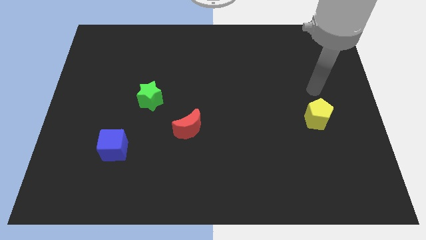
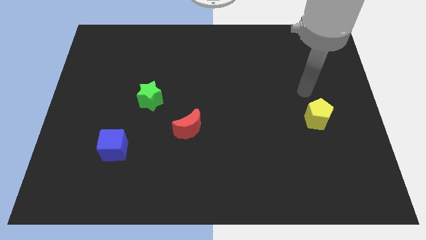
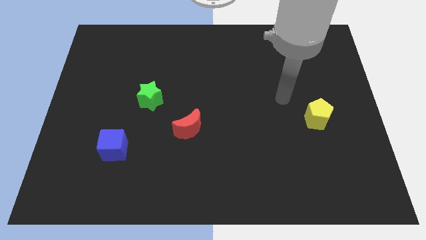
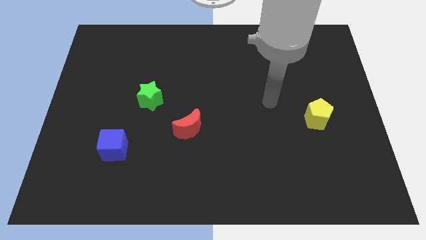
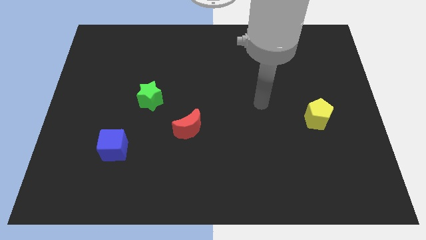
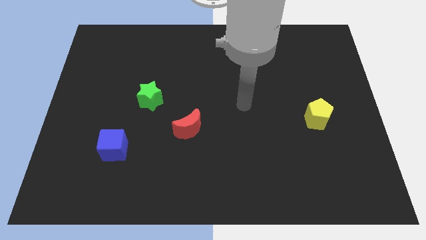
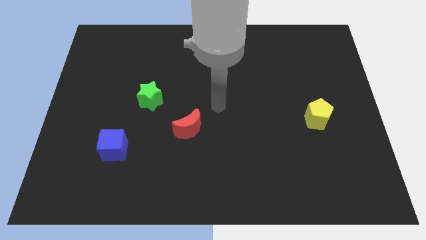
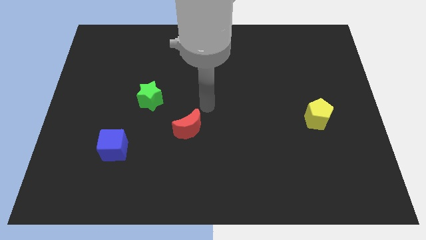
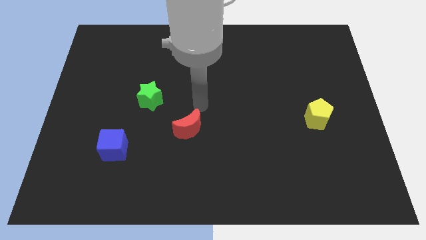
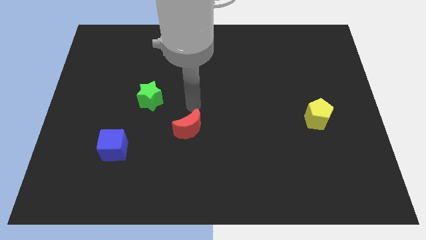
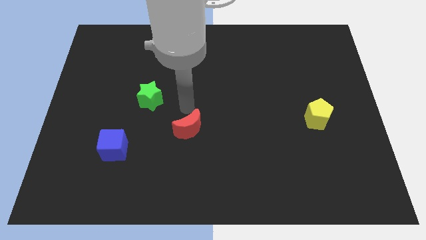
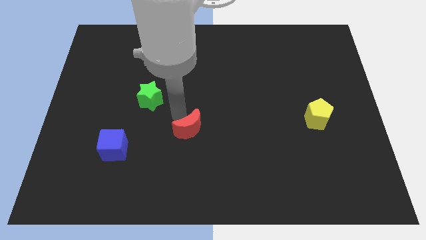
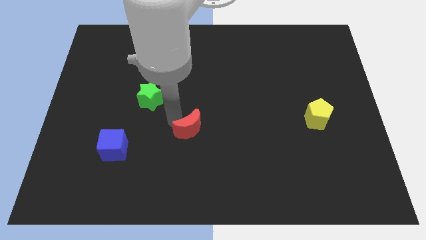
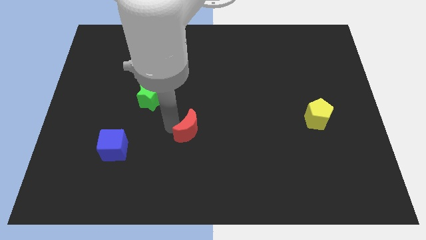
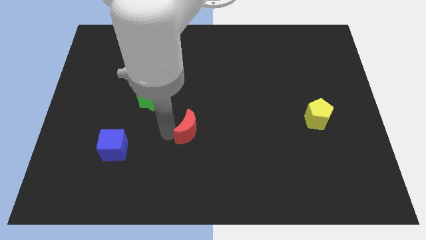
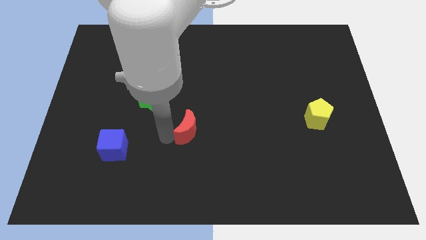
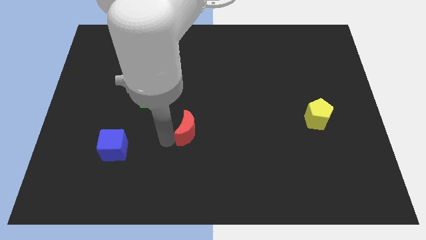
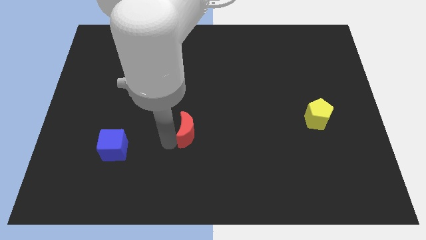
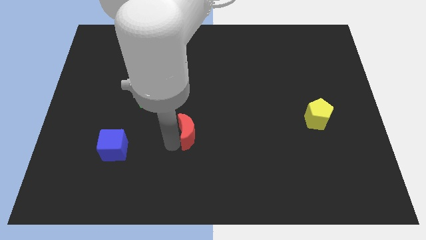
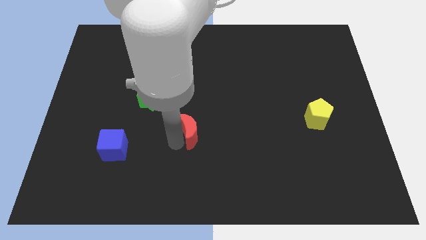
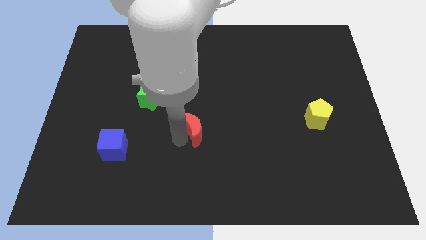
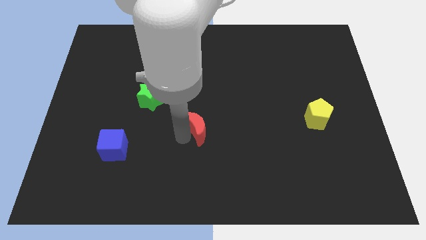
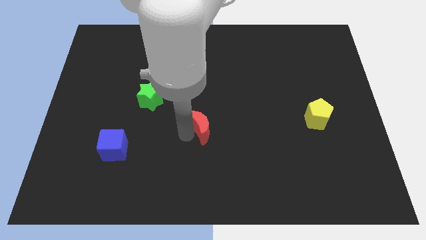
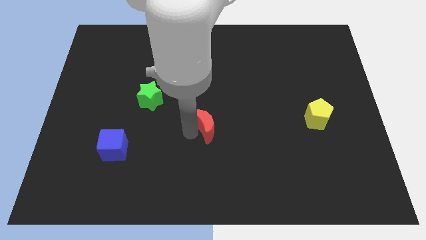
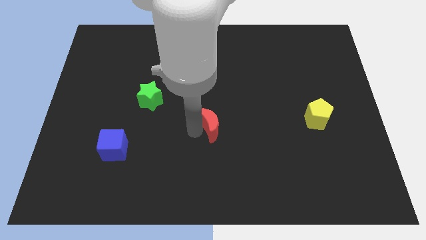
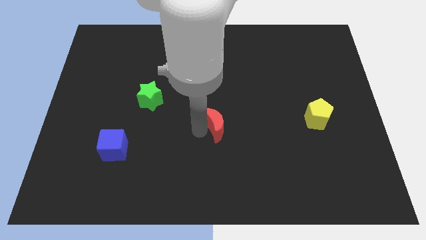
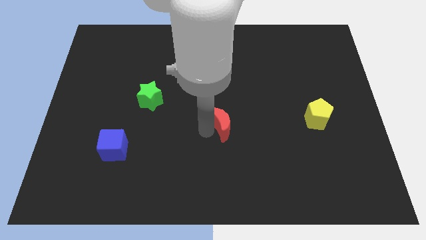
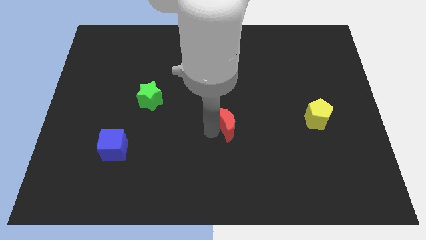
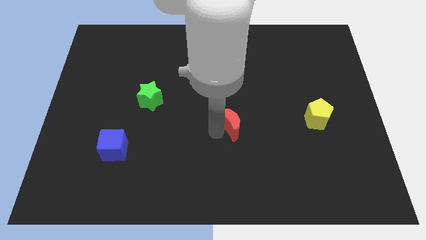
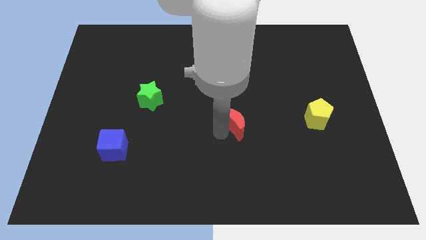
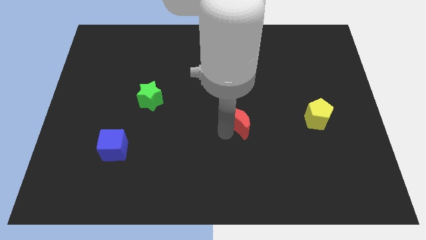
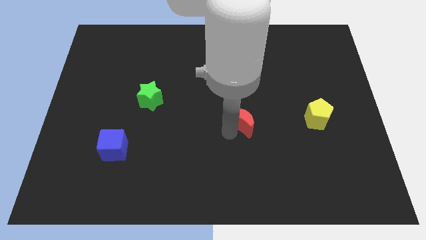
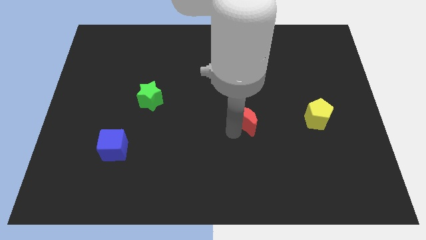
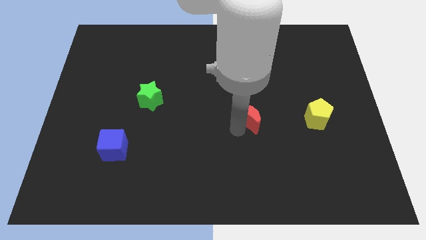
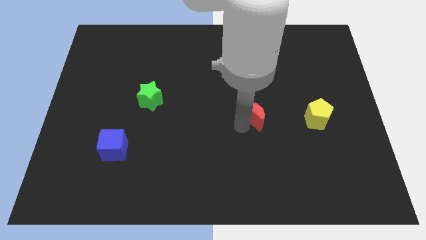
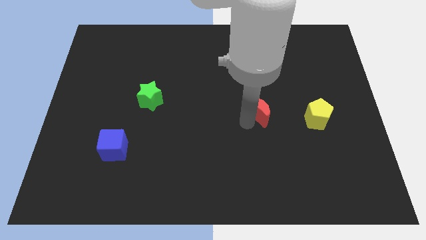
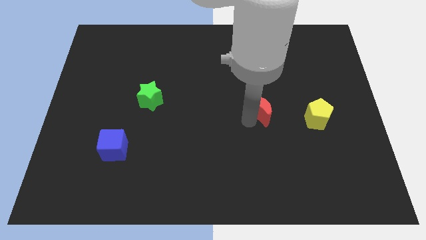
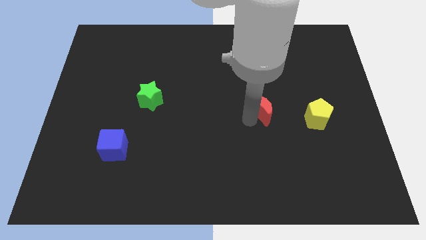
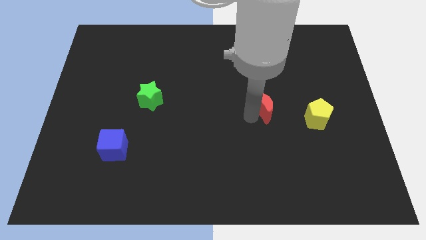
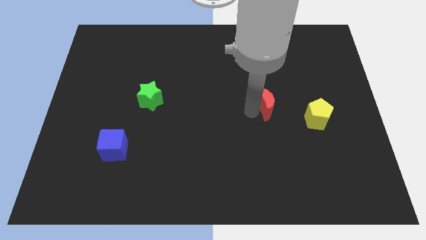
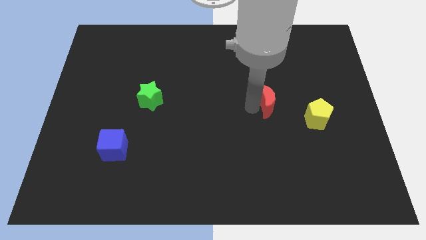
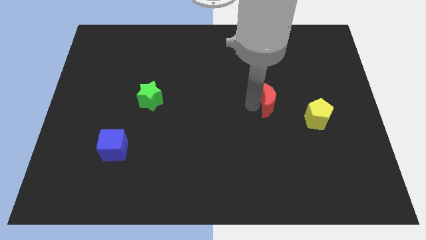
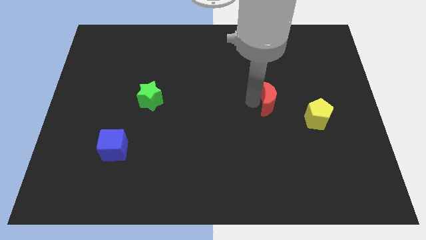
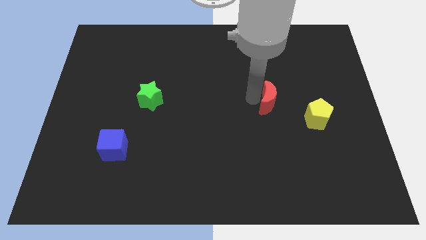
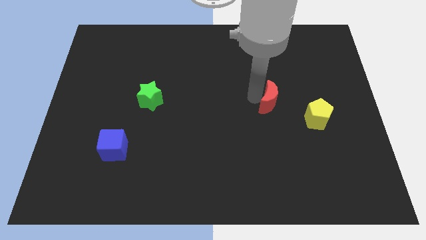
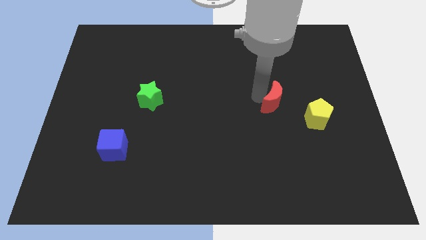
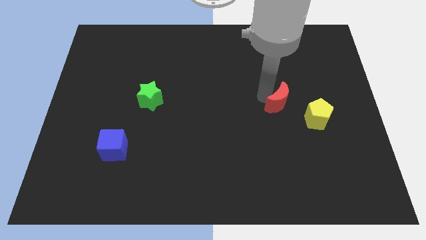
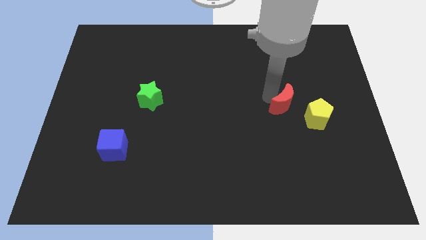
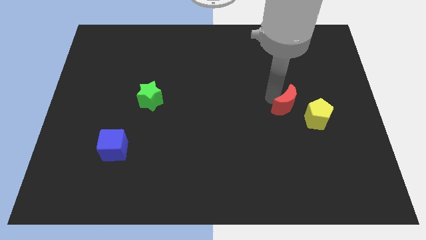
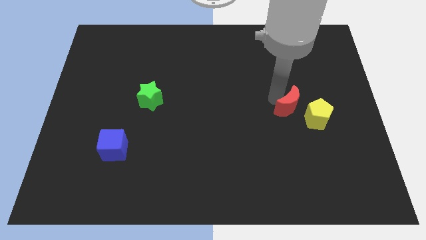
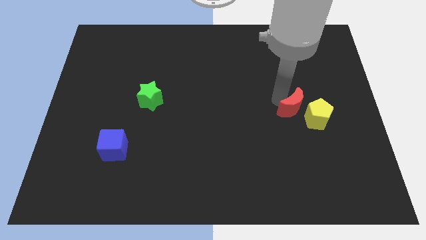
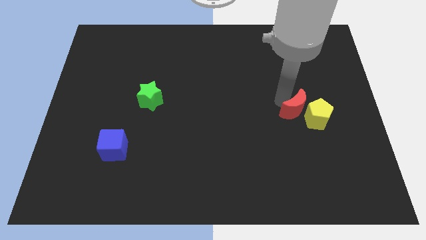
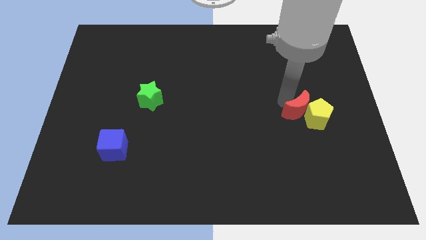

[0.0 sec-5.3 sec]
put the red moon close to the yellow pentagon

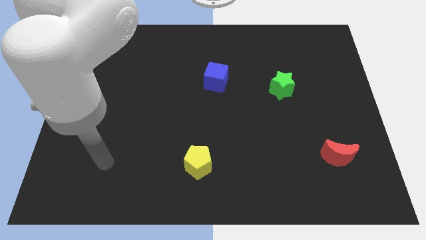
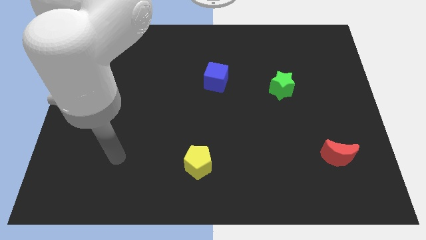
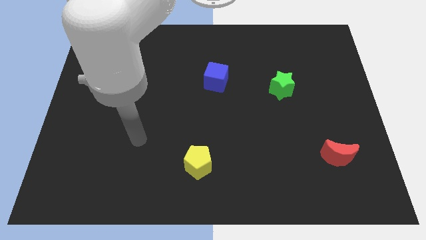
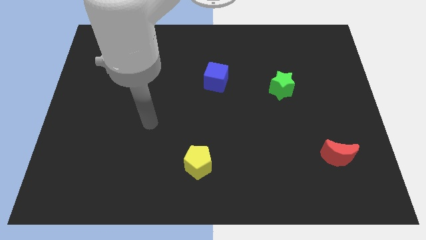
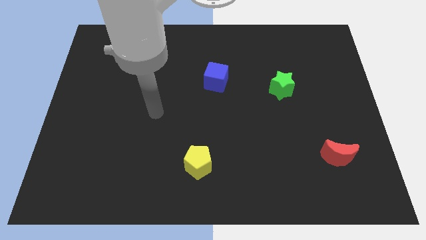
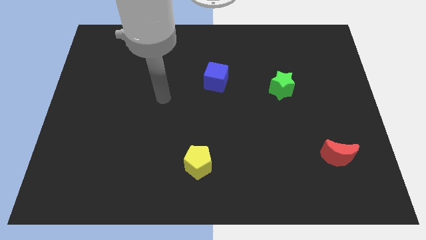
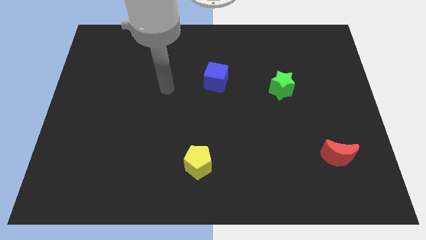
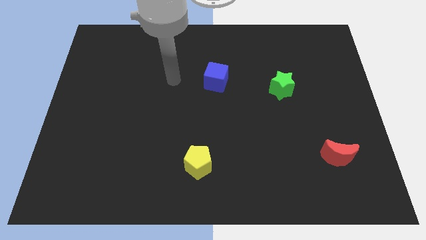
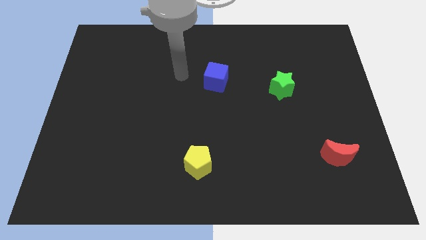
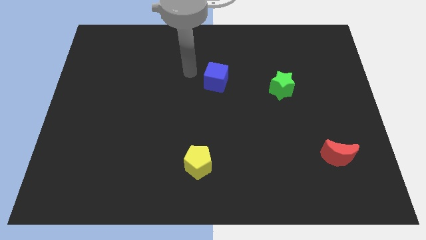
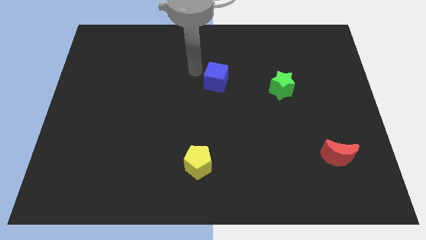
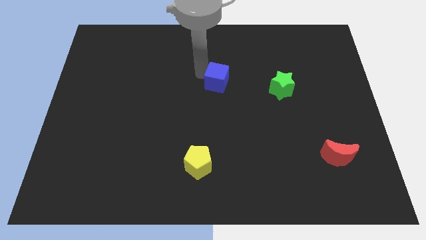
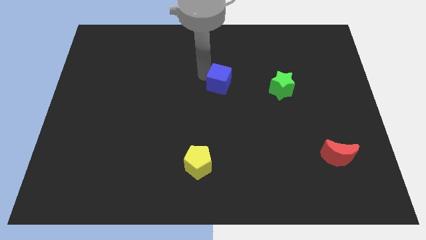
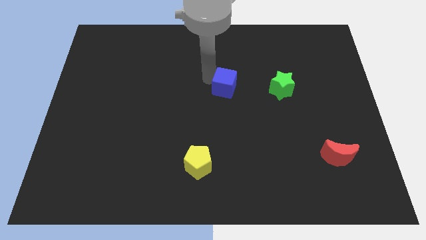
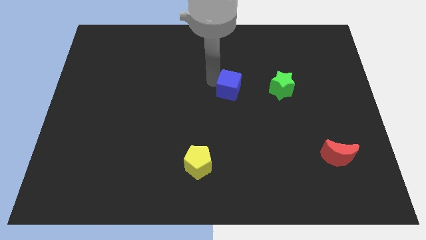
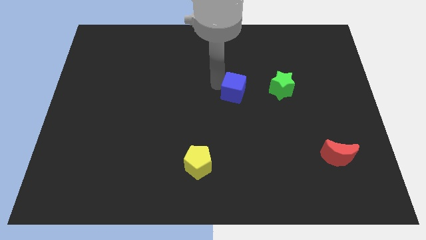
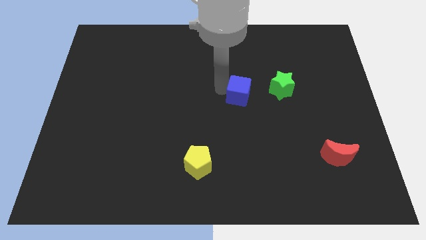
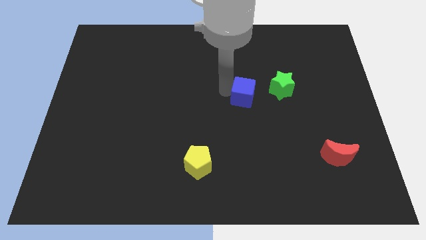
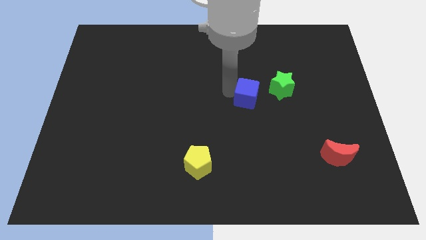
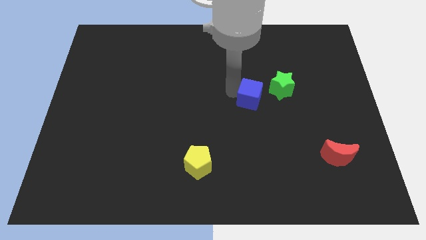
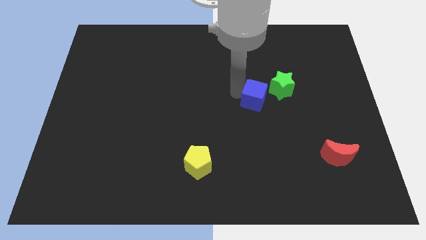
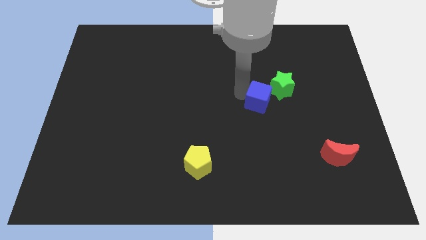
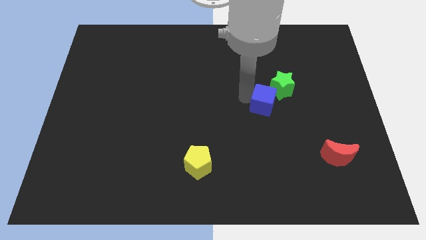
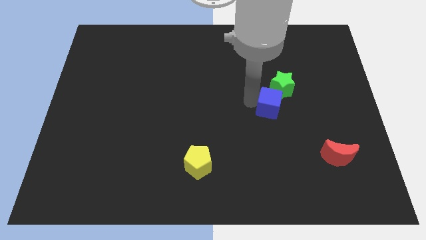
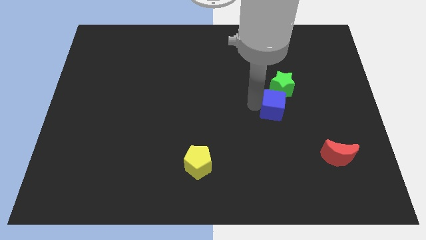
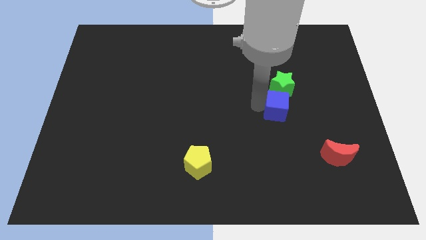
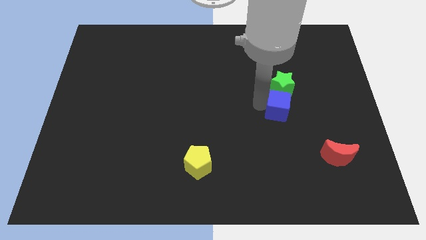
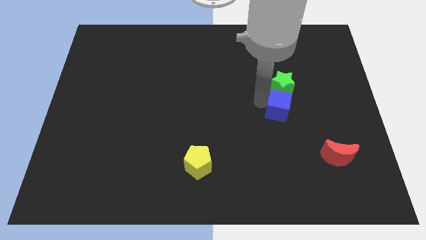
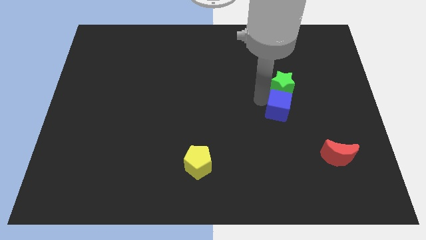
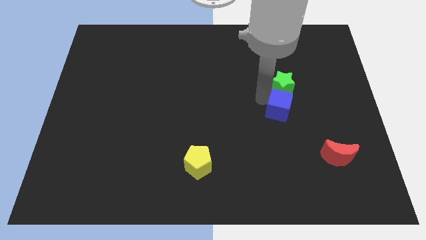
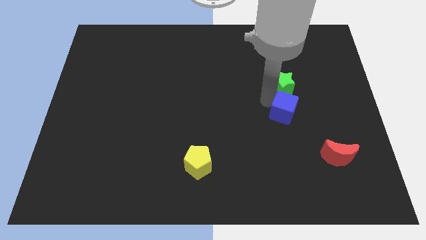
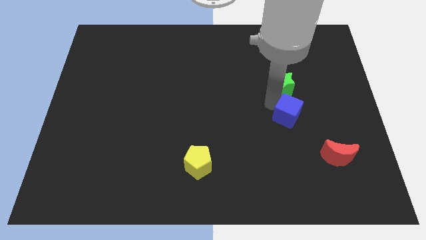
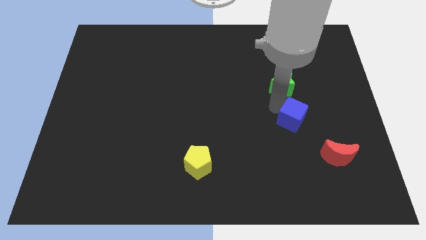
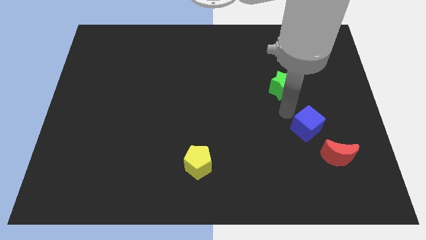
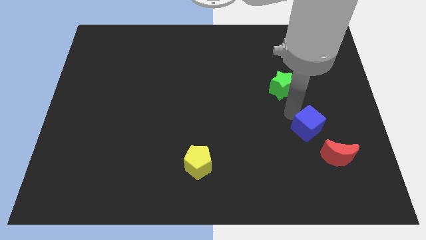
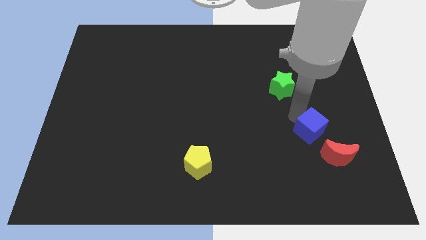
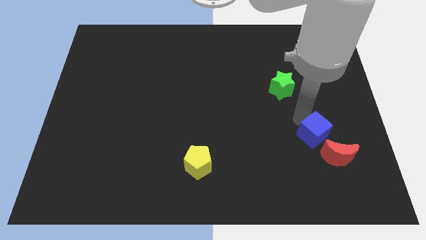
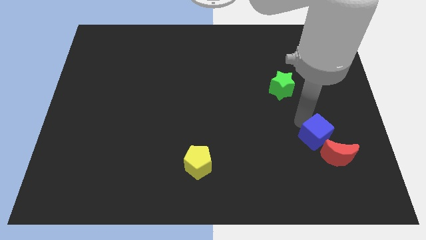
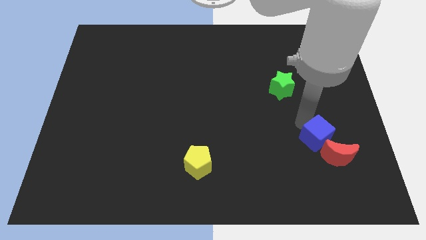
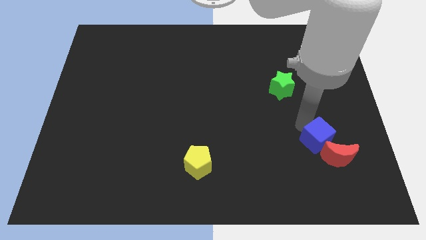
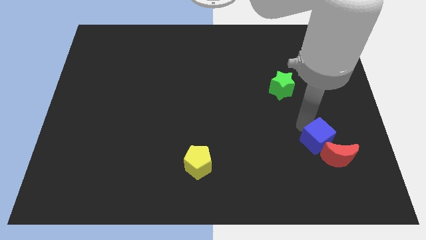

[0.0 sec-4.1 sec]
push the cube next to the moon
